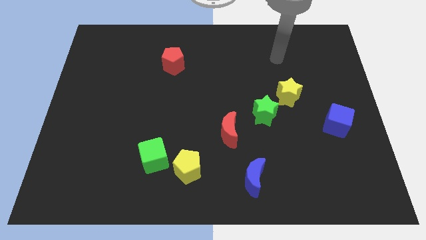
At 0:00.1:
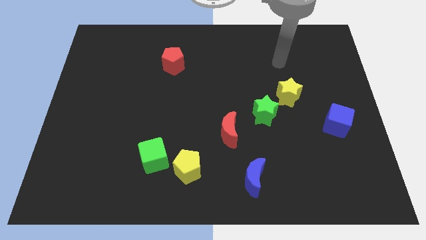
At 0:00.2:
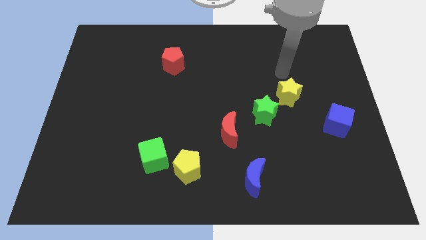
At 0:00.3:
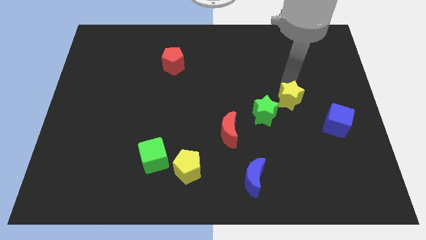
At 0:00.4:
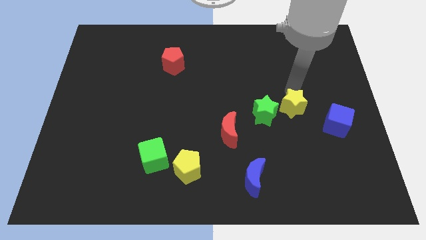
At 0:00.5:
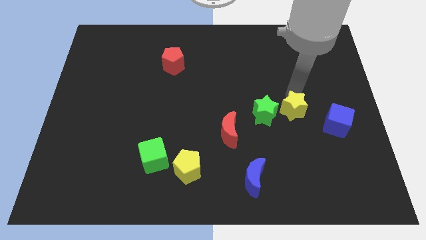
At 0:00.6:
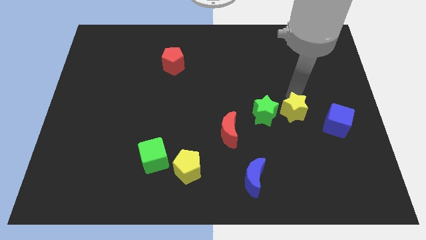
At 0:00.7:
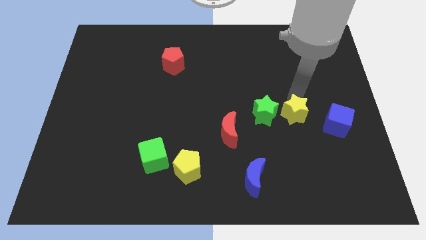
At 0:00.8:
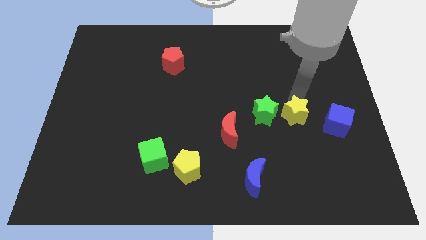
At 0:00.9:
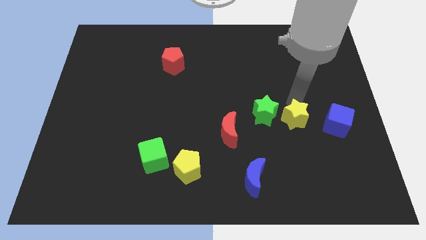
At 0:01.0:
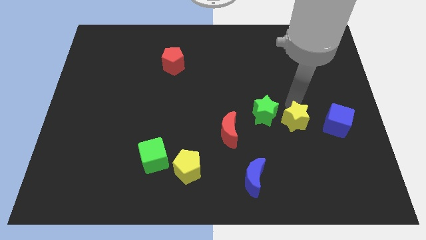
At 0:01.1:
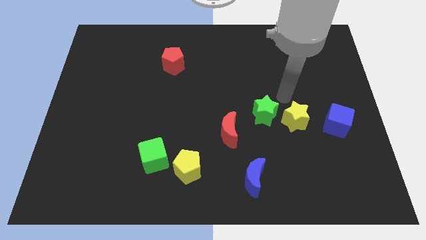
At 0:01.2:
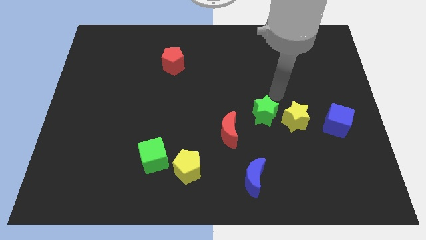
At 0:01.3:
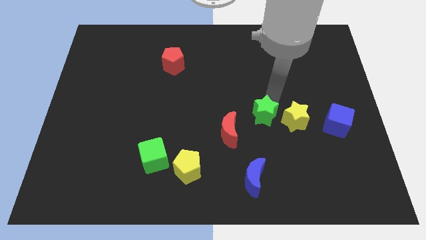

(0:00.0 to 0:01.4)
place the yellow star to the right side of the green star

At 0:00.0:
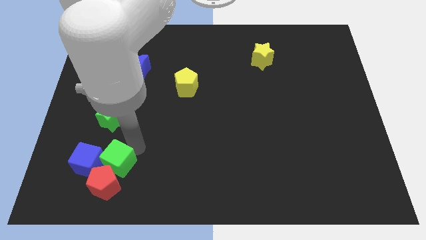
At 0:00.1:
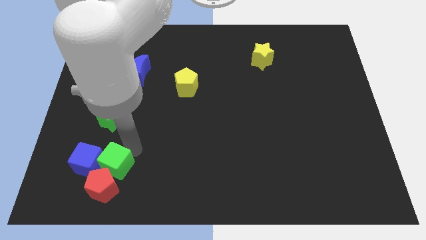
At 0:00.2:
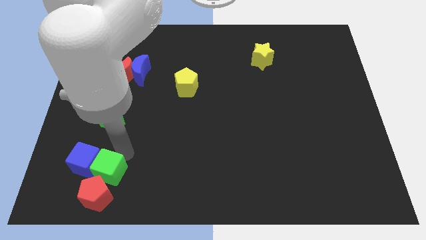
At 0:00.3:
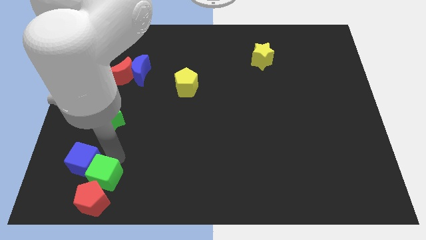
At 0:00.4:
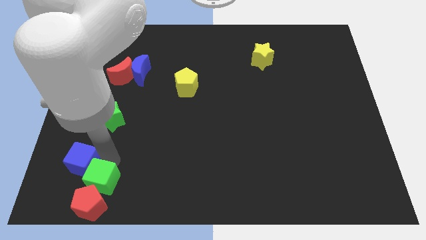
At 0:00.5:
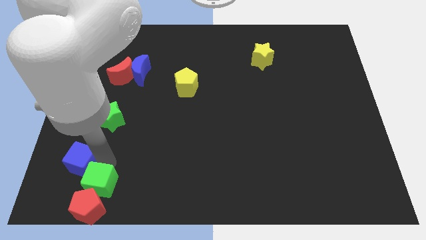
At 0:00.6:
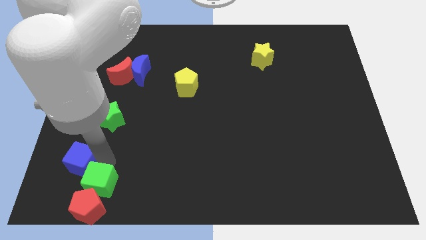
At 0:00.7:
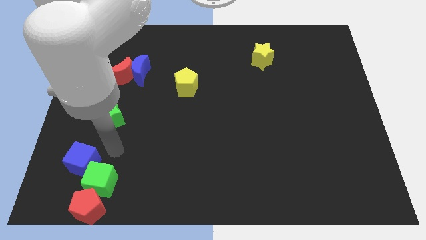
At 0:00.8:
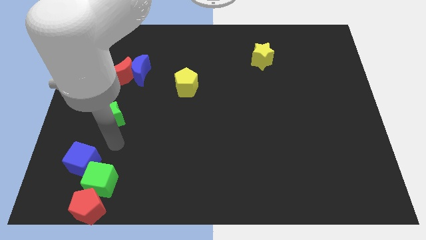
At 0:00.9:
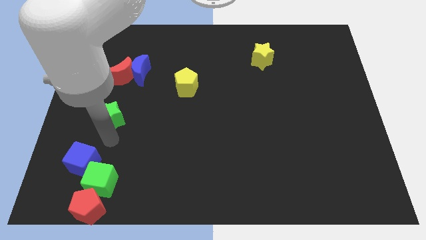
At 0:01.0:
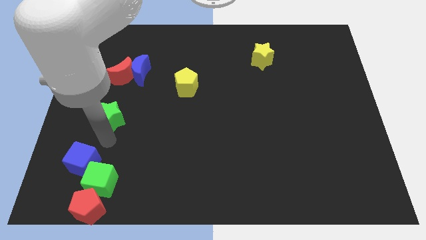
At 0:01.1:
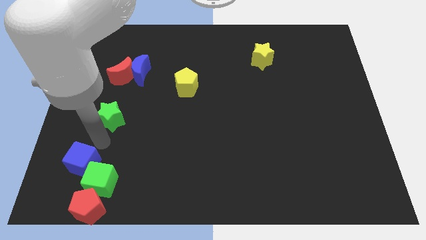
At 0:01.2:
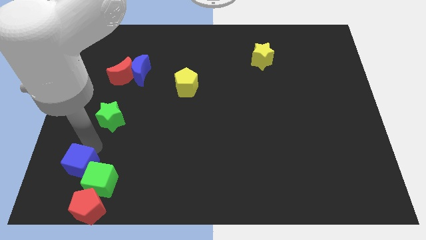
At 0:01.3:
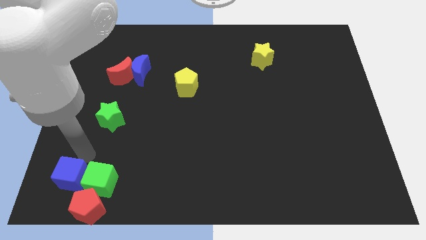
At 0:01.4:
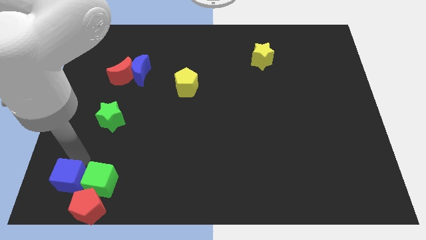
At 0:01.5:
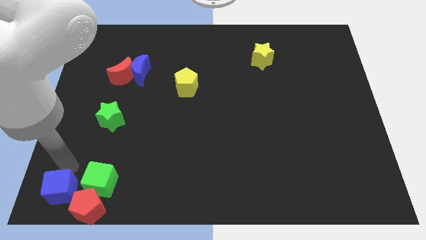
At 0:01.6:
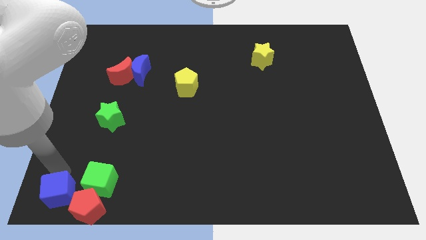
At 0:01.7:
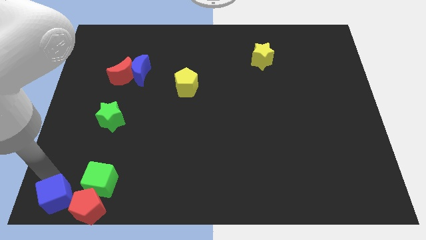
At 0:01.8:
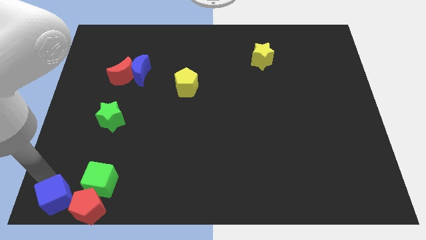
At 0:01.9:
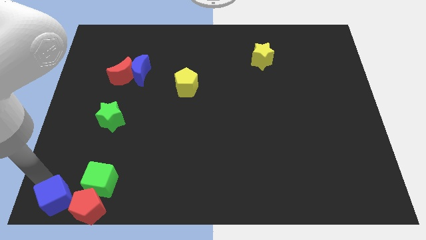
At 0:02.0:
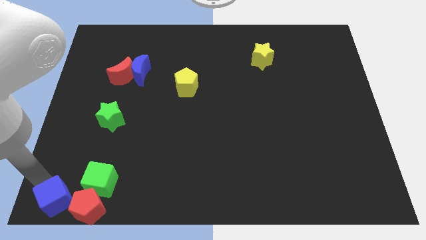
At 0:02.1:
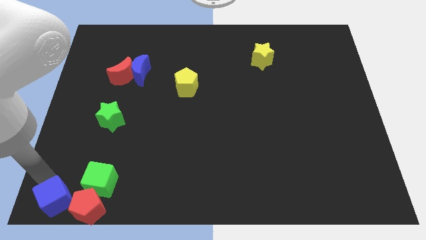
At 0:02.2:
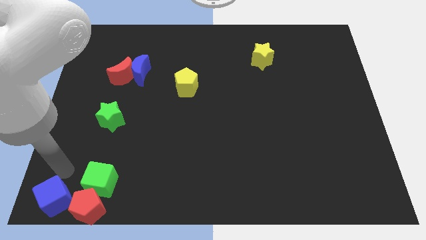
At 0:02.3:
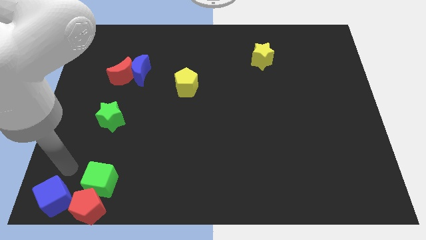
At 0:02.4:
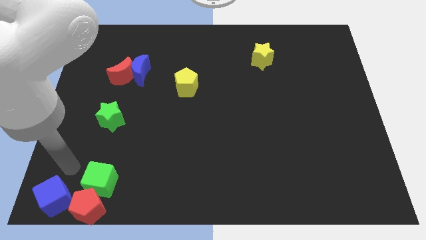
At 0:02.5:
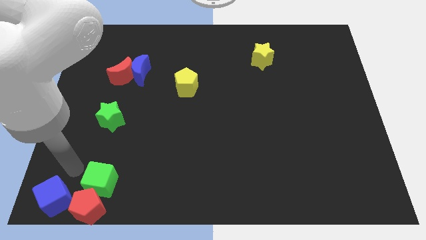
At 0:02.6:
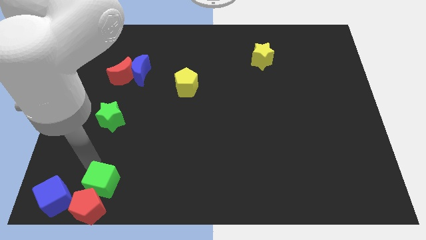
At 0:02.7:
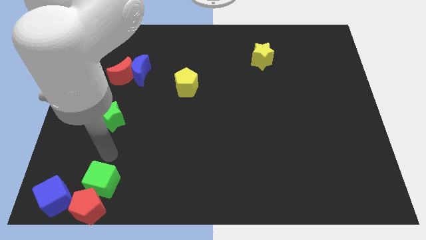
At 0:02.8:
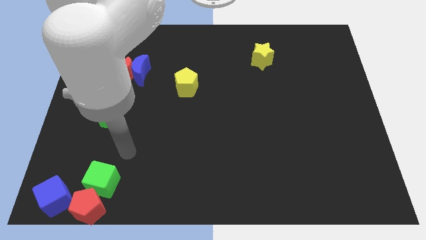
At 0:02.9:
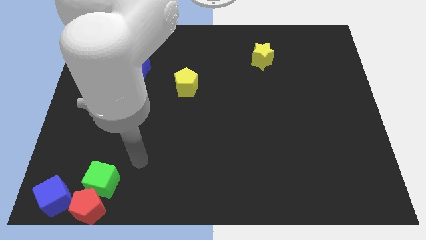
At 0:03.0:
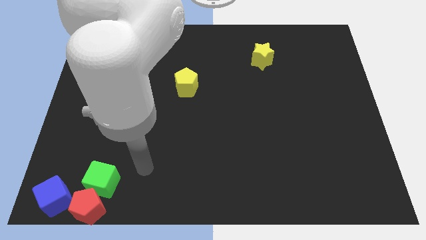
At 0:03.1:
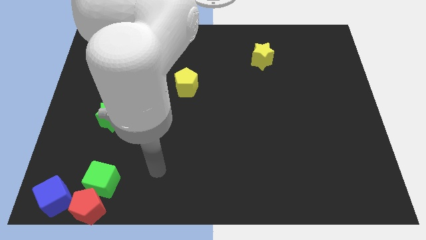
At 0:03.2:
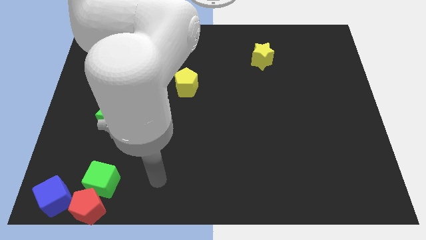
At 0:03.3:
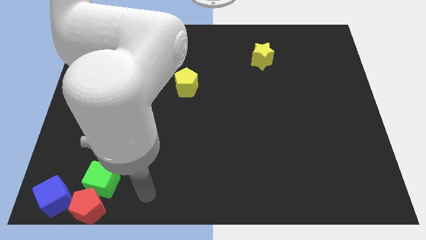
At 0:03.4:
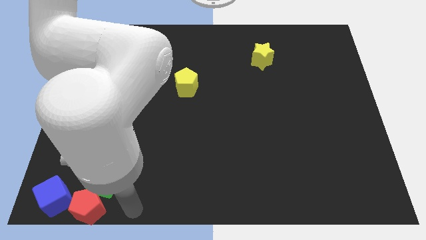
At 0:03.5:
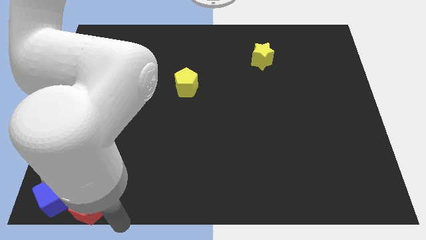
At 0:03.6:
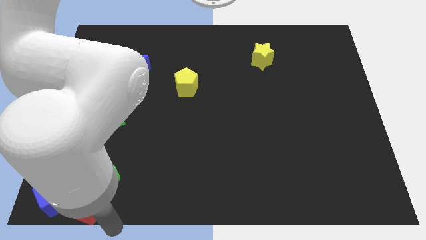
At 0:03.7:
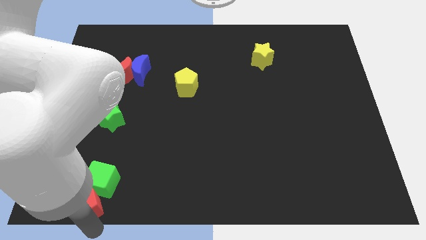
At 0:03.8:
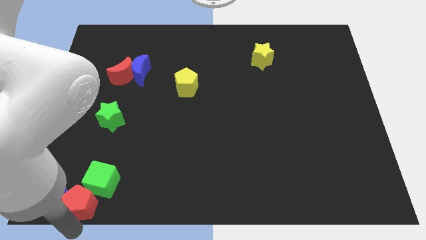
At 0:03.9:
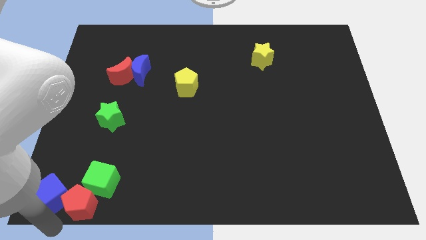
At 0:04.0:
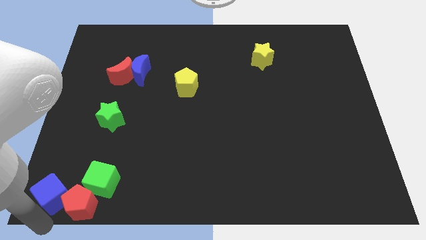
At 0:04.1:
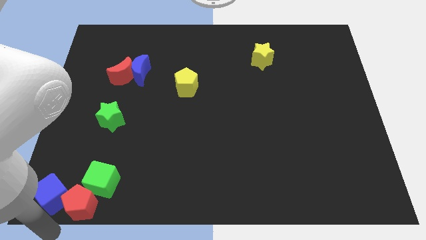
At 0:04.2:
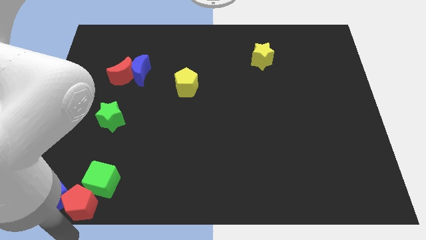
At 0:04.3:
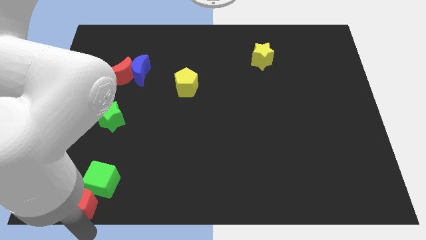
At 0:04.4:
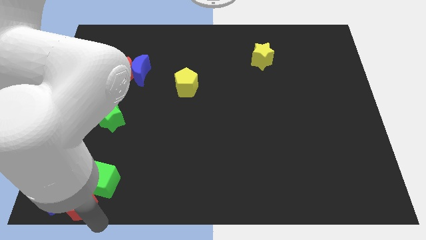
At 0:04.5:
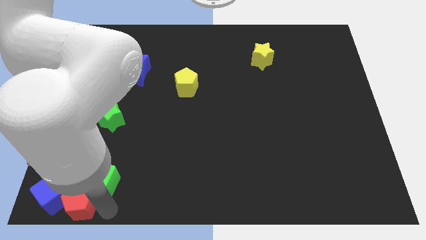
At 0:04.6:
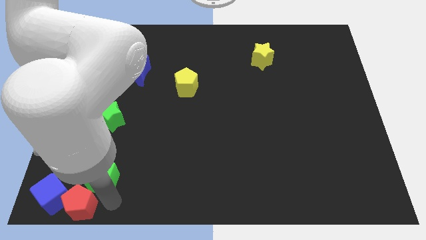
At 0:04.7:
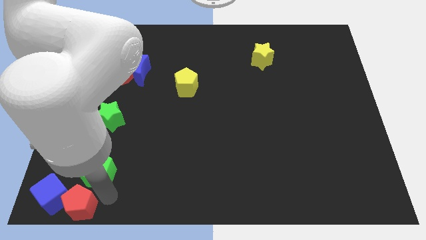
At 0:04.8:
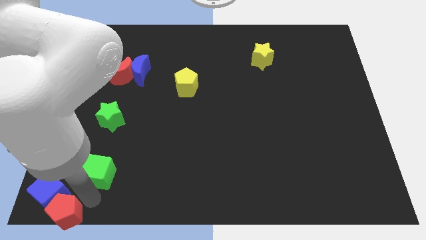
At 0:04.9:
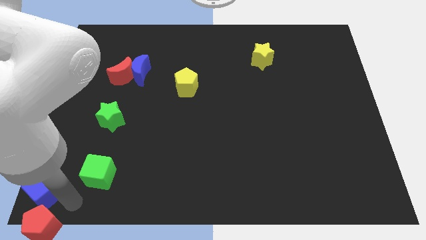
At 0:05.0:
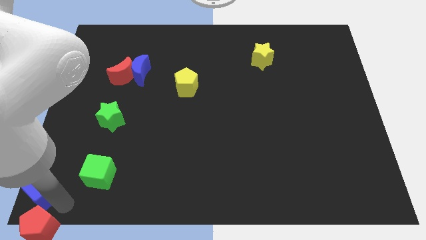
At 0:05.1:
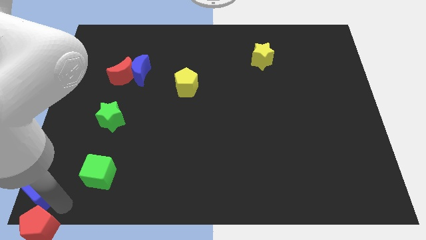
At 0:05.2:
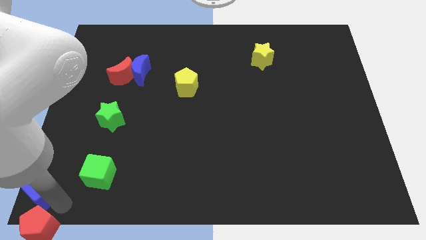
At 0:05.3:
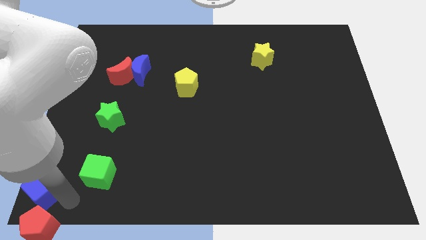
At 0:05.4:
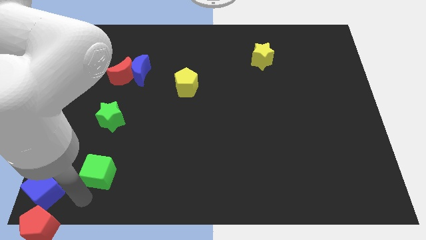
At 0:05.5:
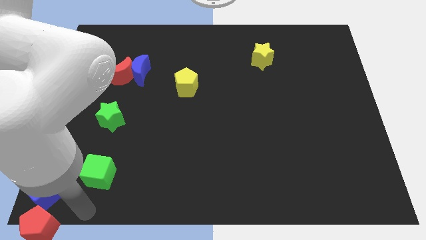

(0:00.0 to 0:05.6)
move the red pentagon and blue cube to the bottom left side

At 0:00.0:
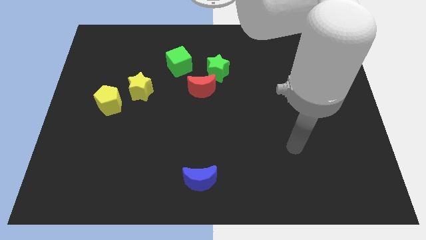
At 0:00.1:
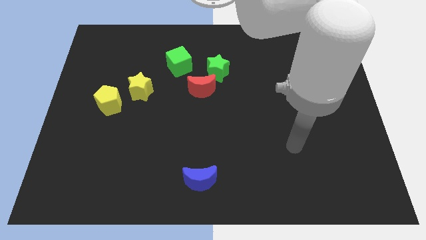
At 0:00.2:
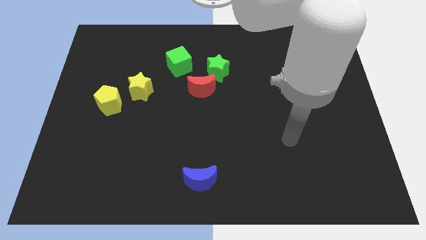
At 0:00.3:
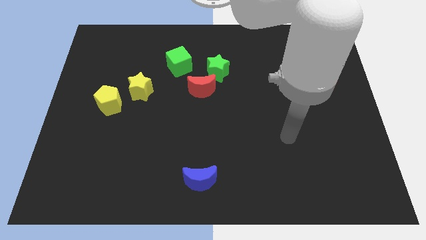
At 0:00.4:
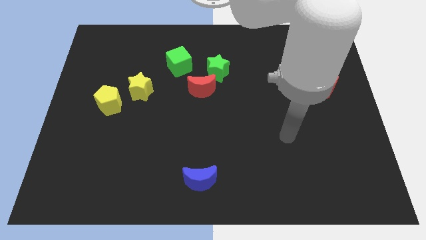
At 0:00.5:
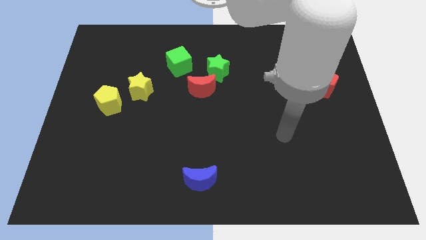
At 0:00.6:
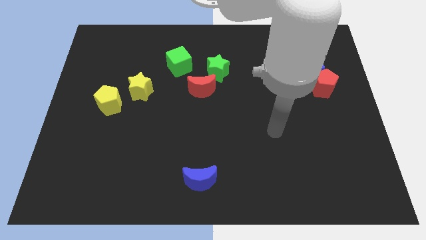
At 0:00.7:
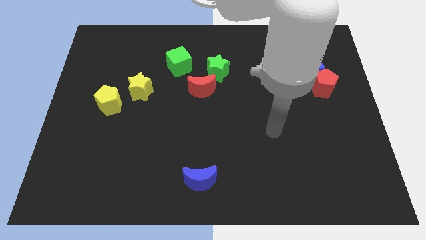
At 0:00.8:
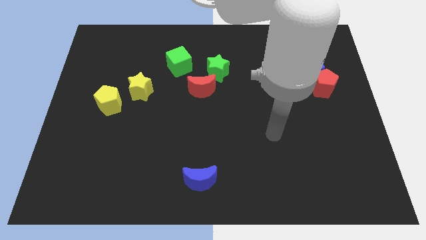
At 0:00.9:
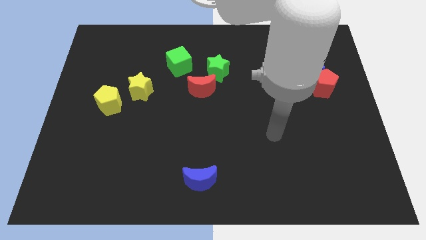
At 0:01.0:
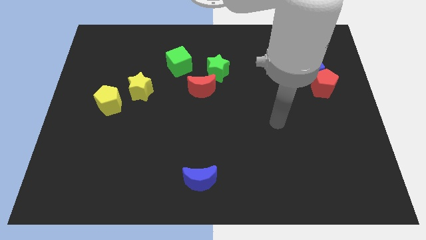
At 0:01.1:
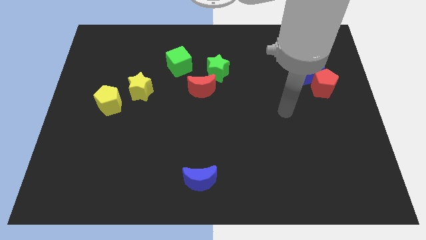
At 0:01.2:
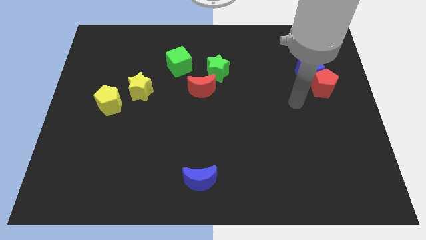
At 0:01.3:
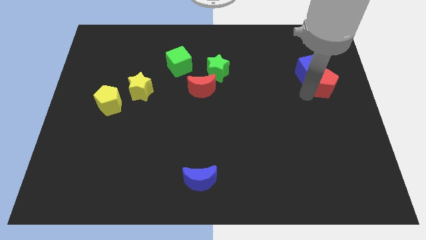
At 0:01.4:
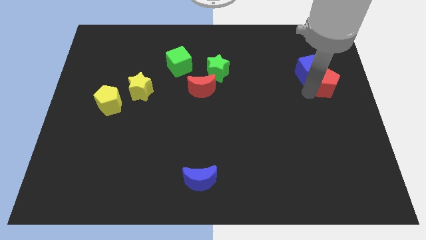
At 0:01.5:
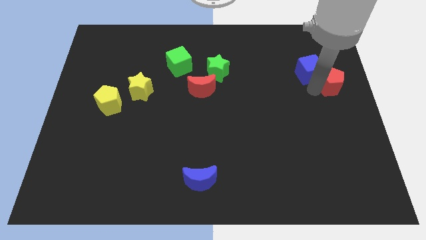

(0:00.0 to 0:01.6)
tap the red pentagon

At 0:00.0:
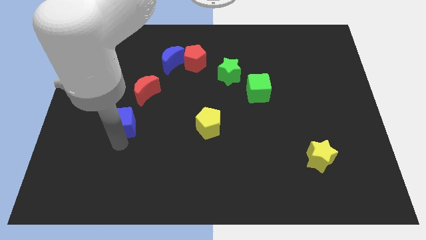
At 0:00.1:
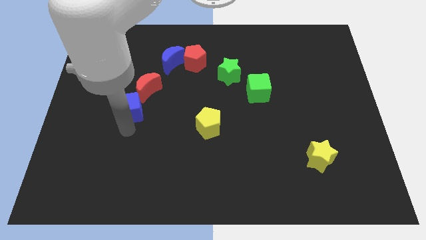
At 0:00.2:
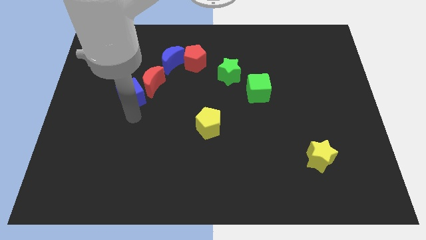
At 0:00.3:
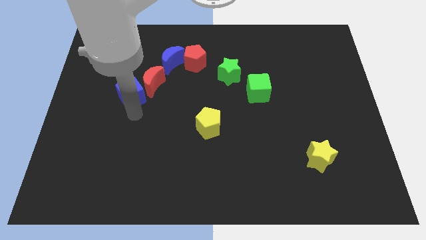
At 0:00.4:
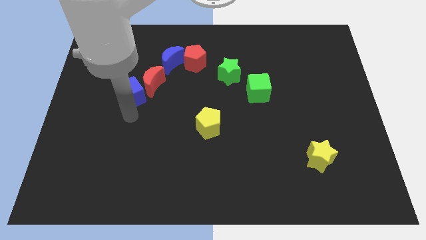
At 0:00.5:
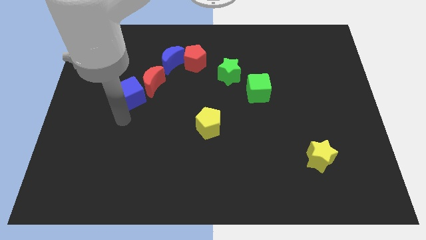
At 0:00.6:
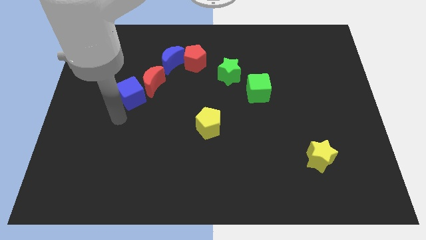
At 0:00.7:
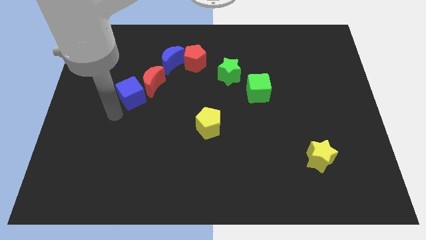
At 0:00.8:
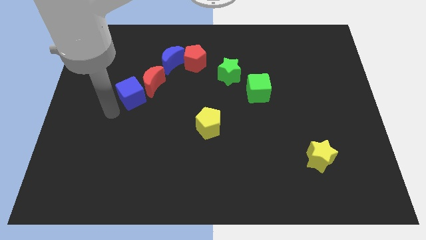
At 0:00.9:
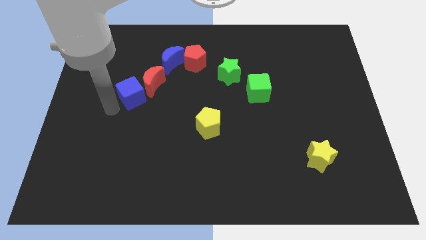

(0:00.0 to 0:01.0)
push the blue cube into the red moon
